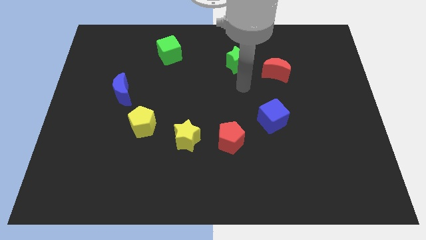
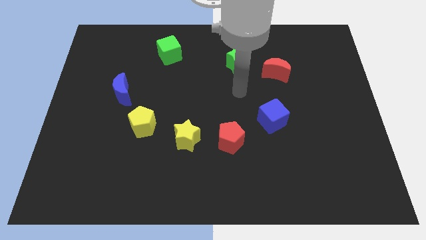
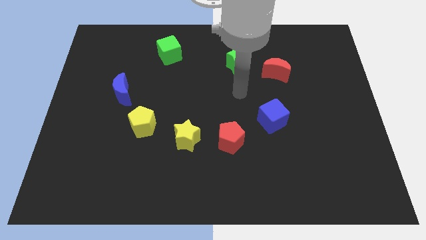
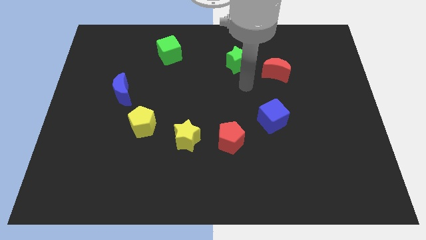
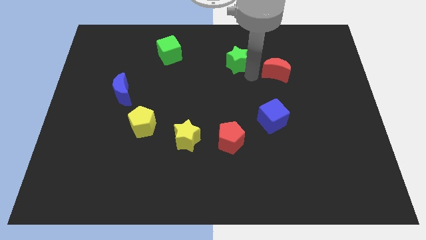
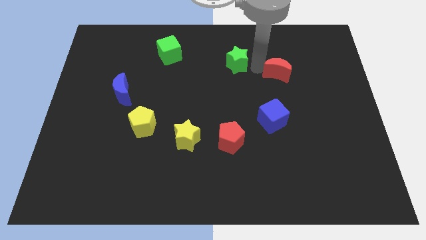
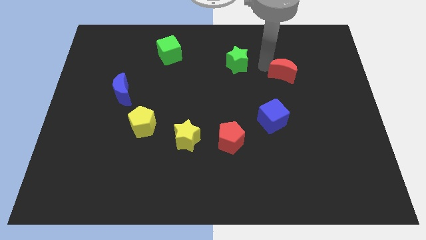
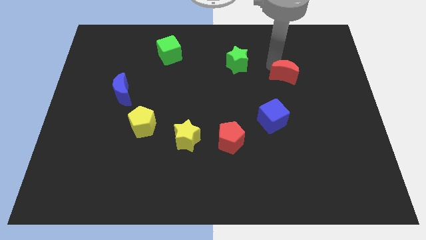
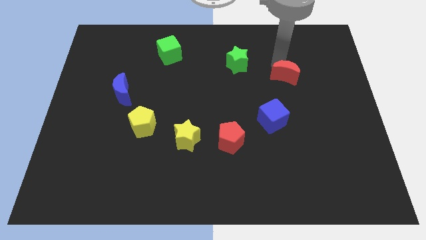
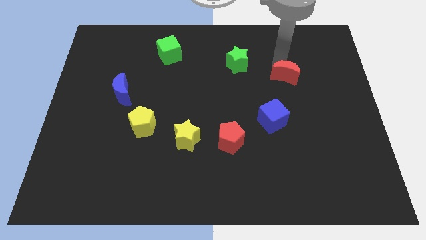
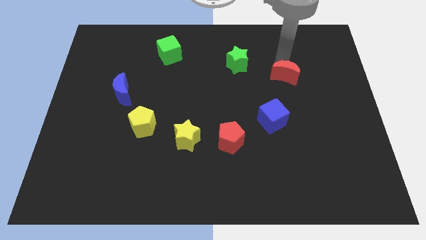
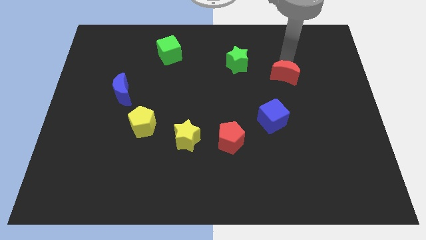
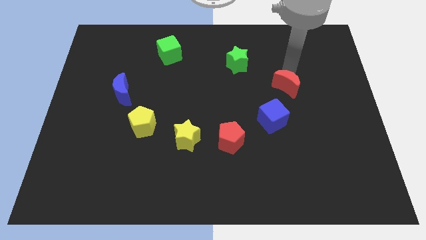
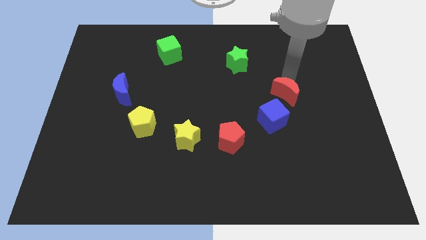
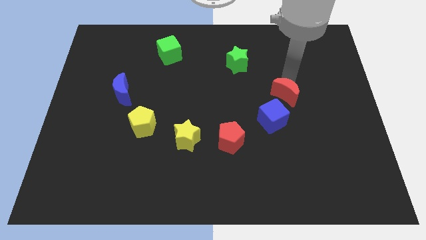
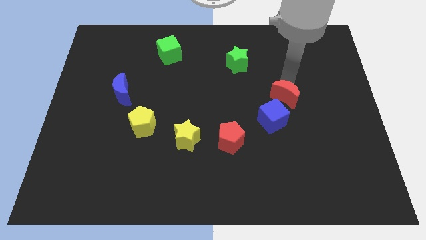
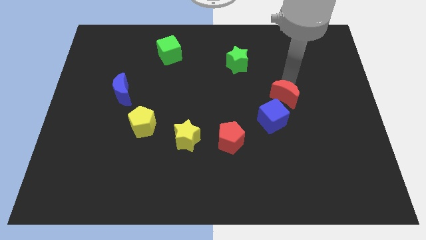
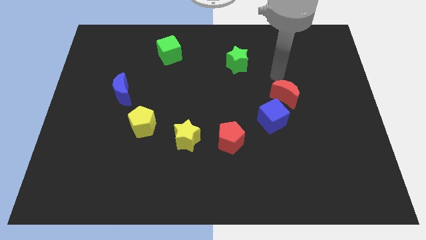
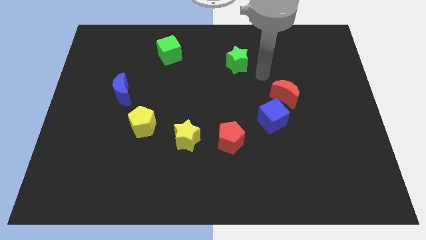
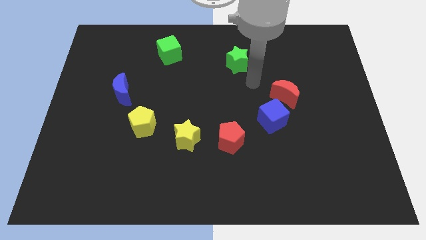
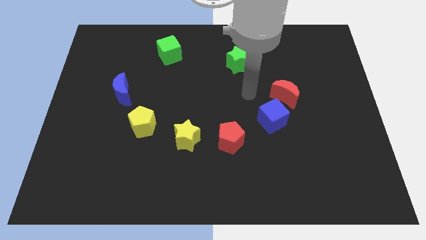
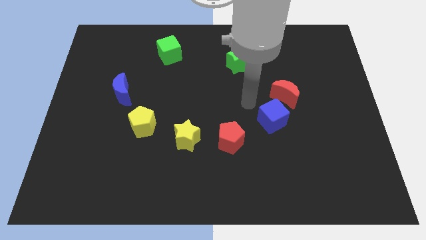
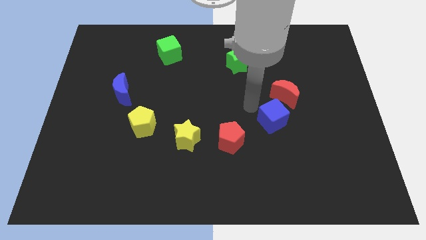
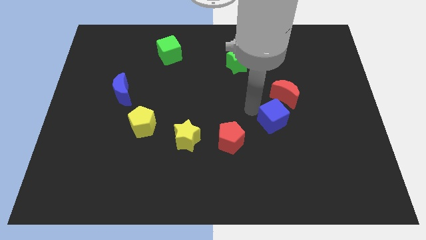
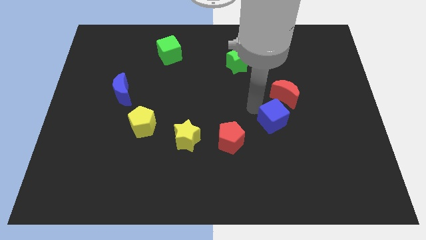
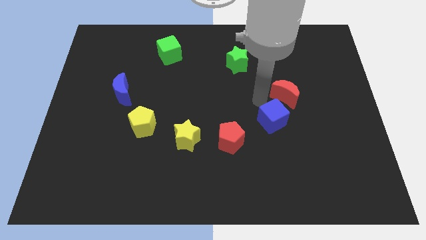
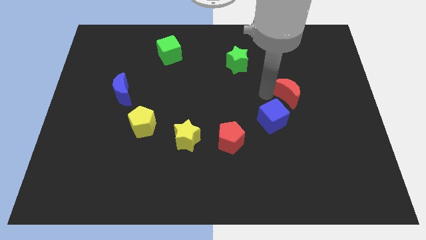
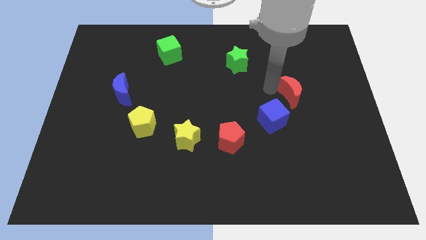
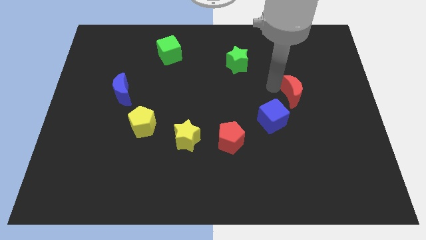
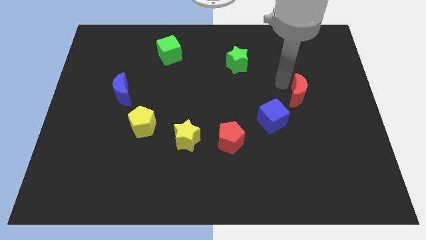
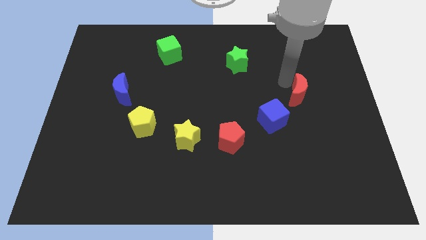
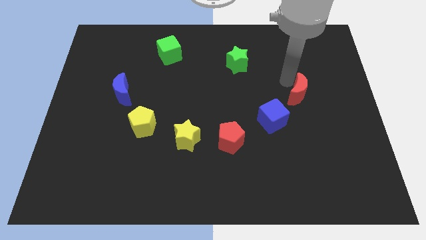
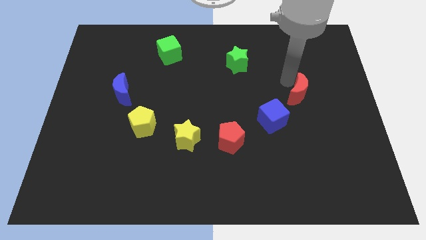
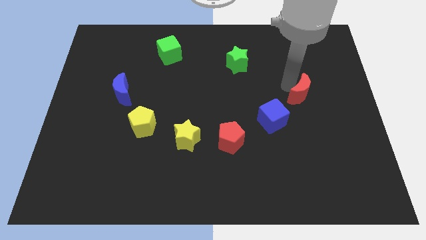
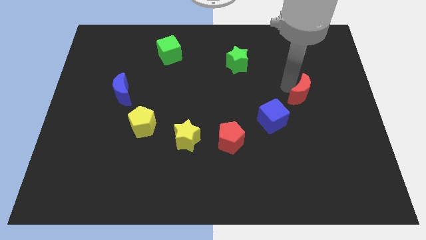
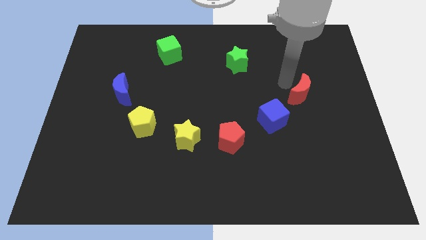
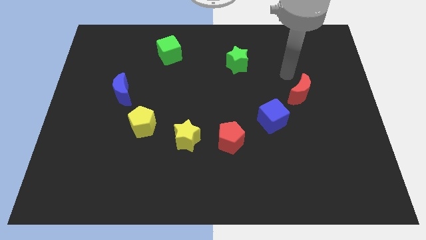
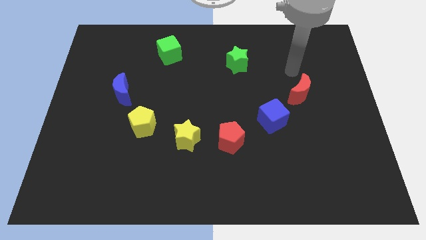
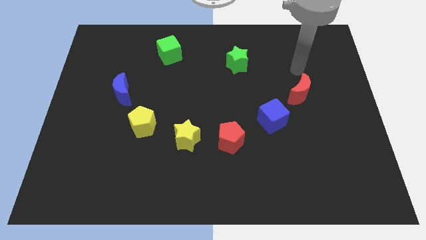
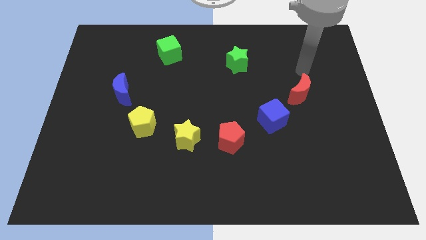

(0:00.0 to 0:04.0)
move the red crescent to the top right side of the blue cube

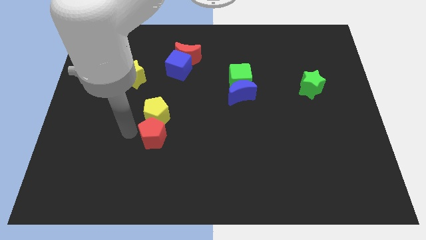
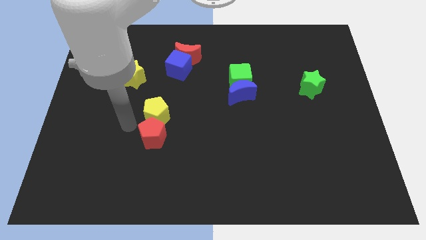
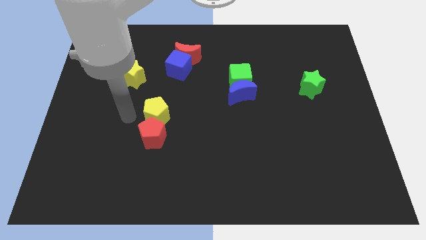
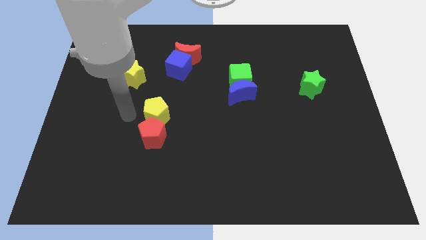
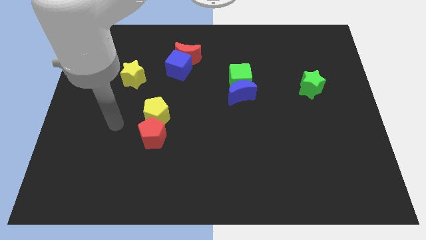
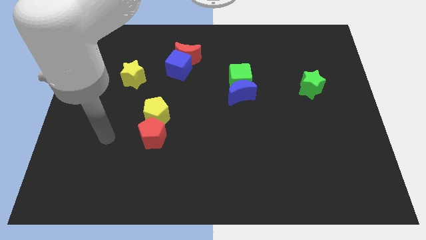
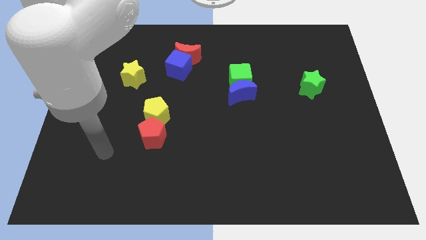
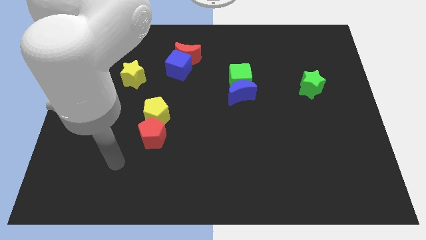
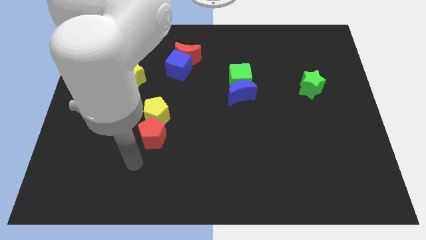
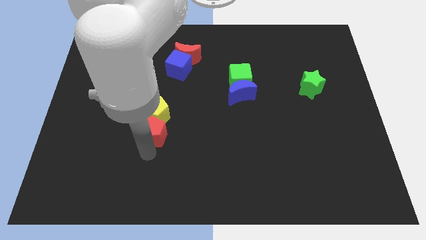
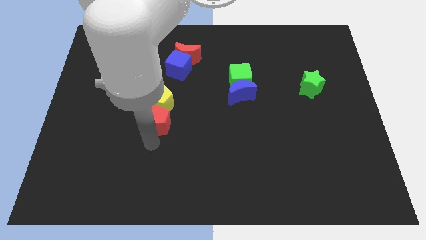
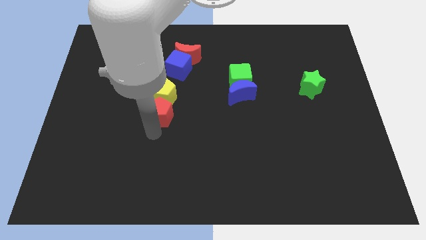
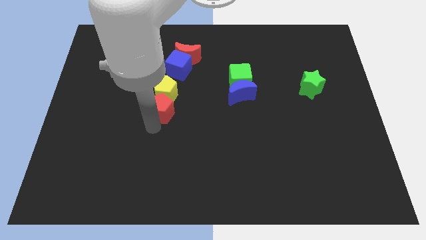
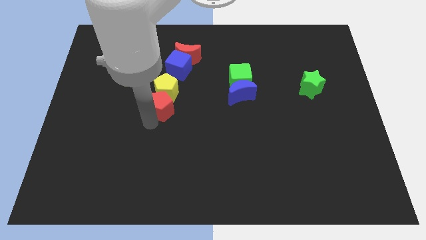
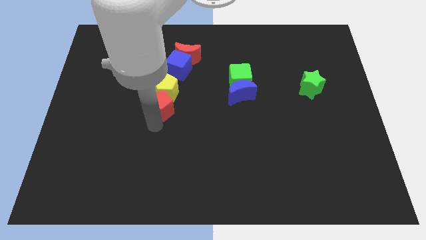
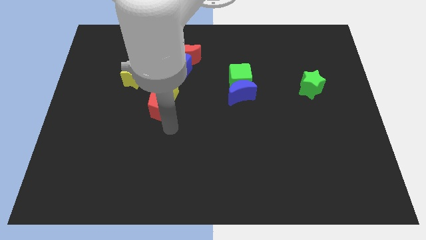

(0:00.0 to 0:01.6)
move the red pentagon towards top

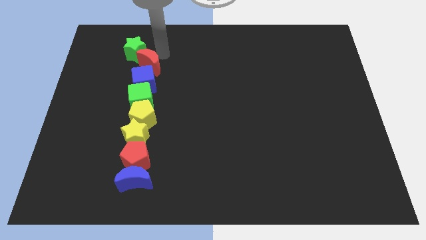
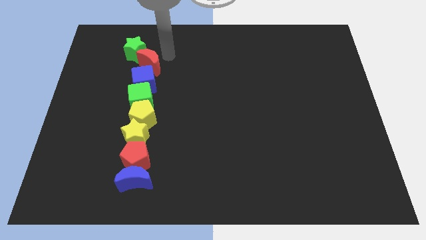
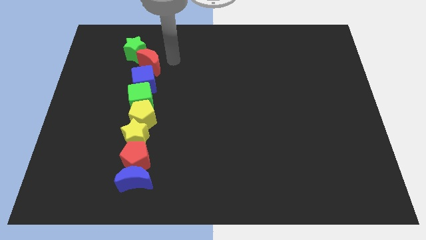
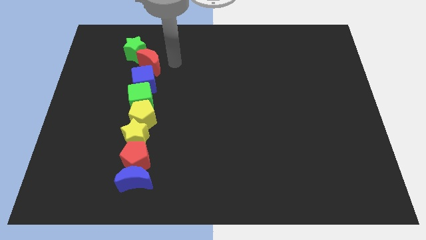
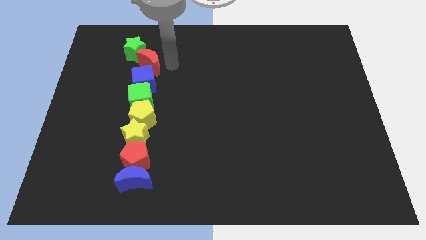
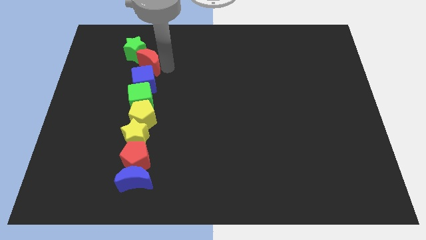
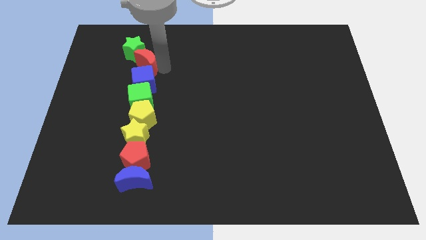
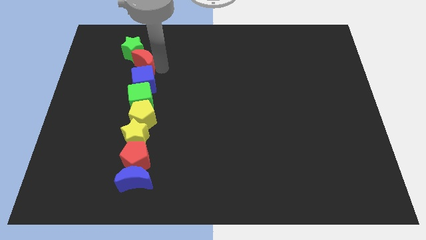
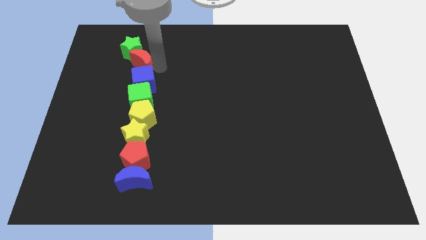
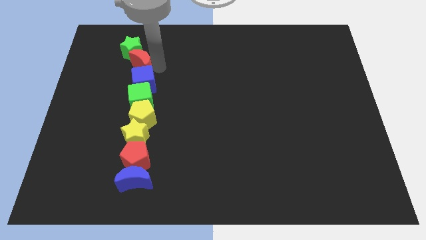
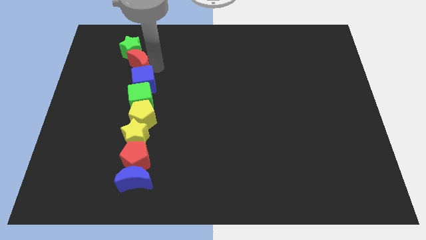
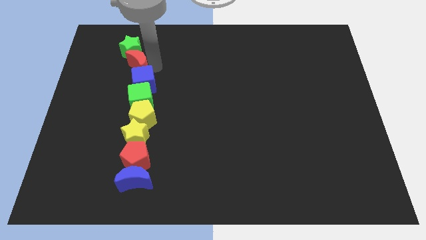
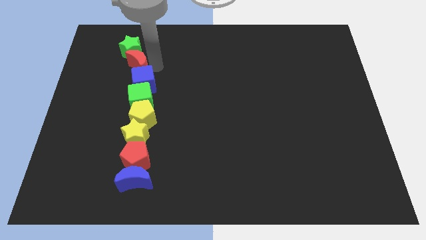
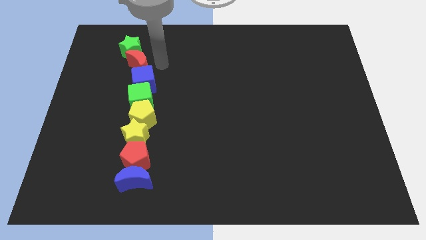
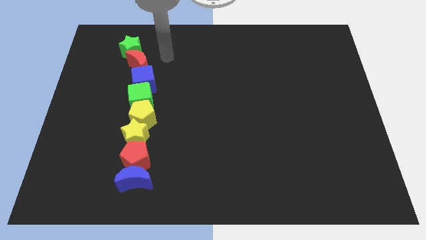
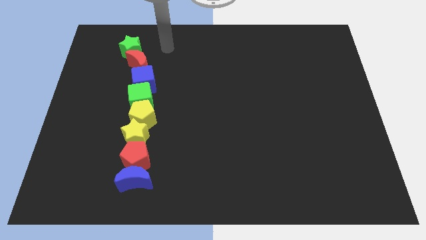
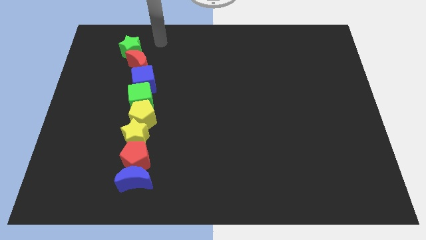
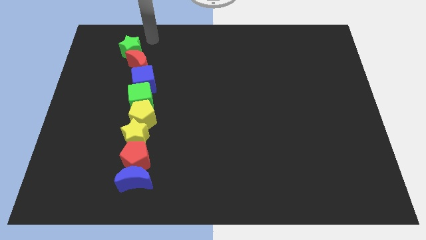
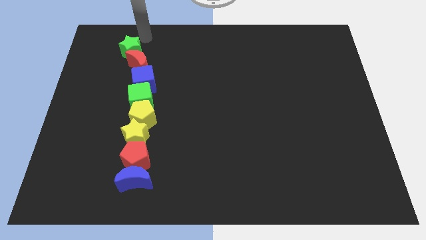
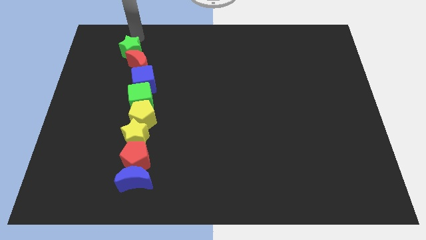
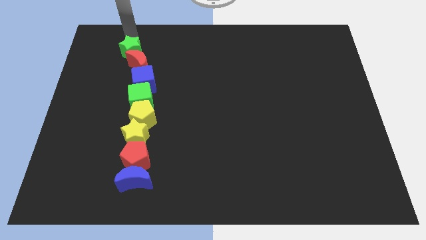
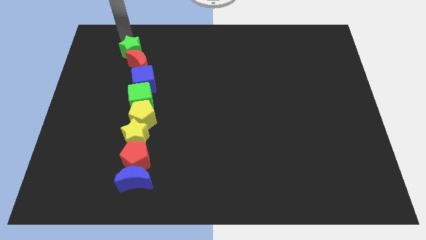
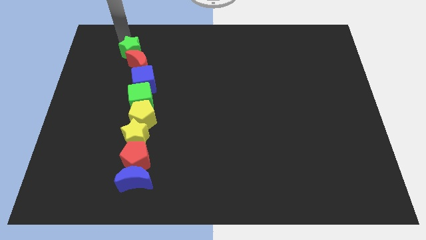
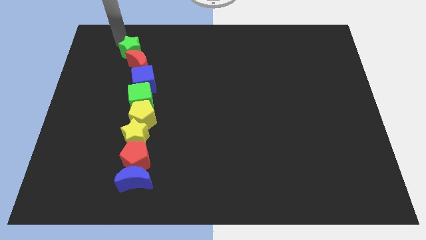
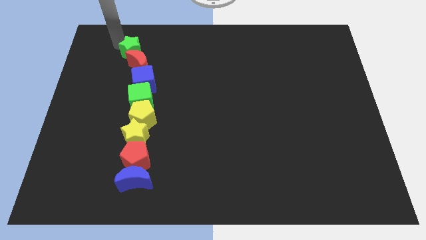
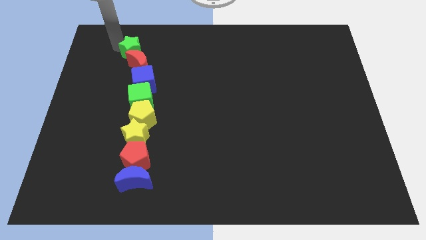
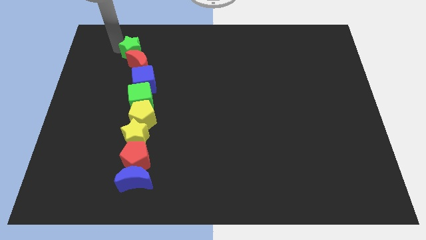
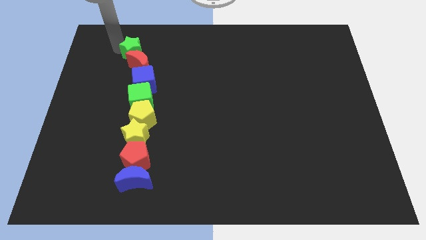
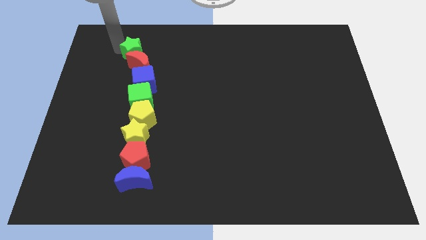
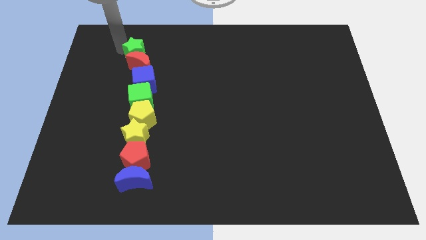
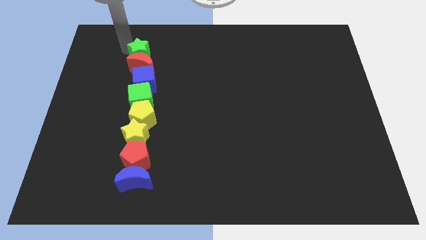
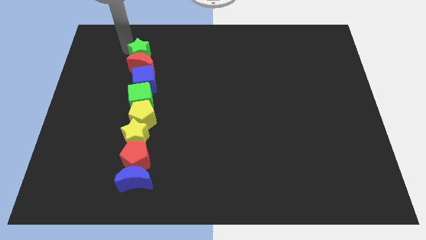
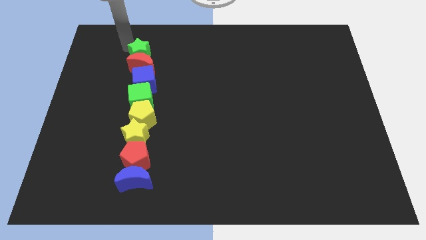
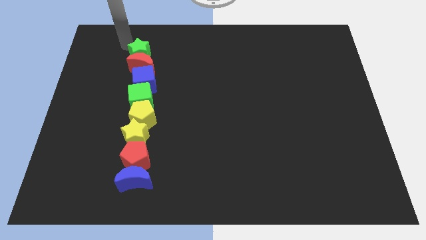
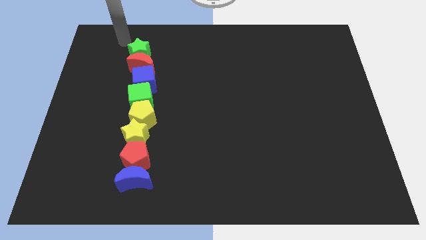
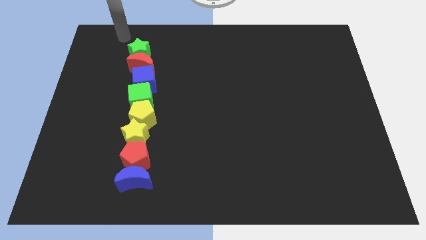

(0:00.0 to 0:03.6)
push red crescent into the centre of green star and blue cube
